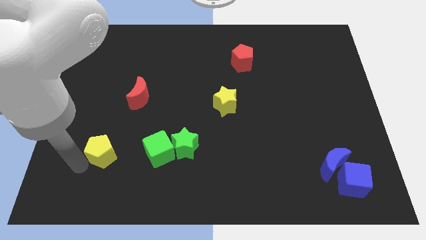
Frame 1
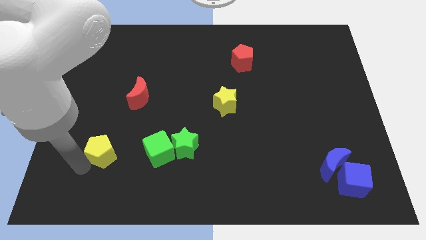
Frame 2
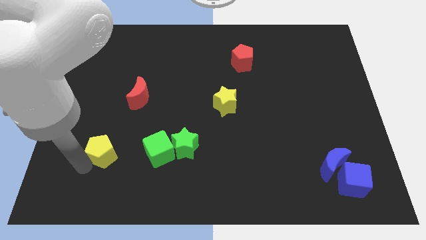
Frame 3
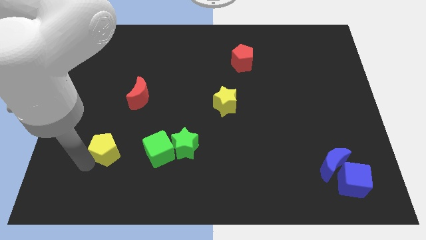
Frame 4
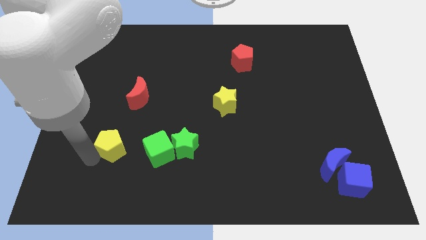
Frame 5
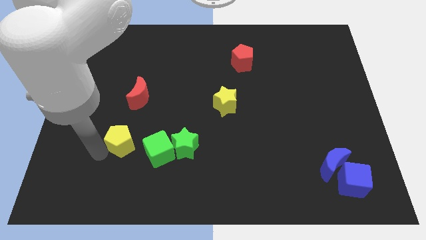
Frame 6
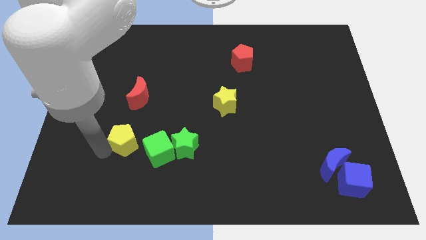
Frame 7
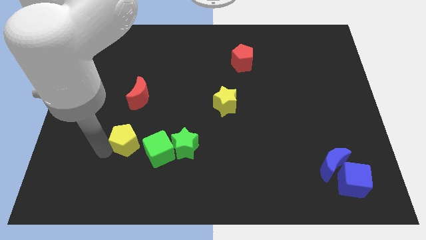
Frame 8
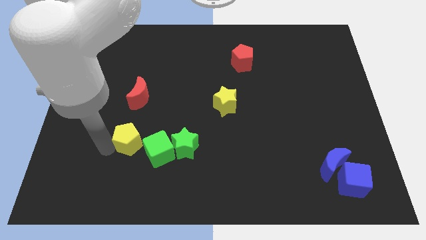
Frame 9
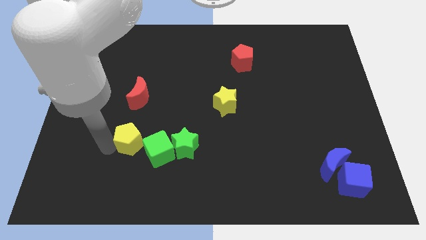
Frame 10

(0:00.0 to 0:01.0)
push the yellow pentagon close to the green cube

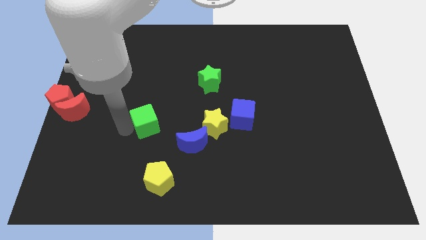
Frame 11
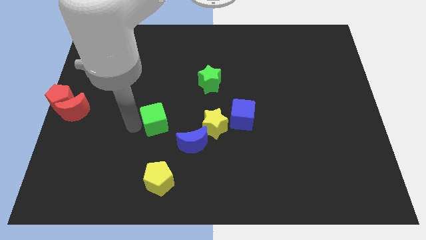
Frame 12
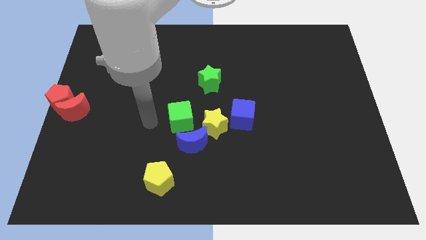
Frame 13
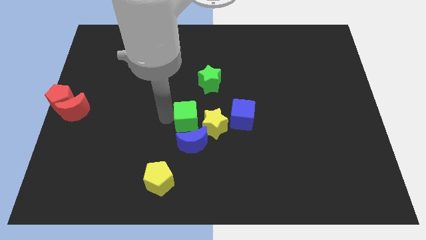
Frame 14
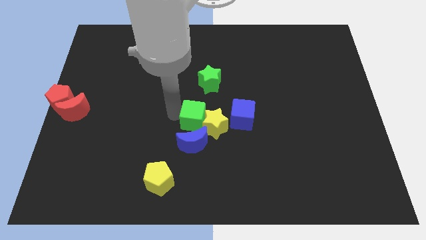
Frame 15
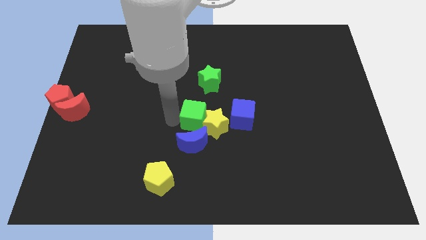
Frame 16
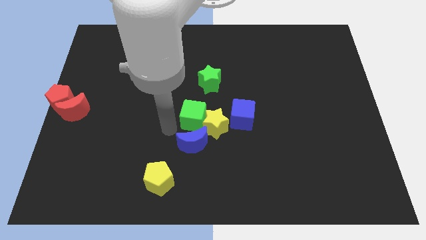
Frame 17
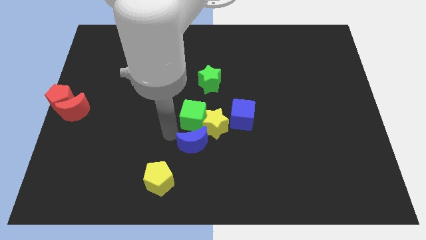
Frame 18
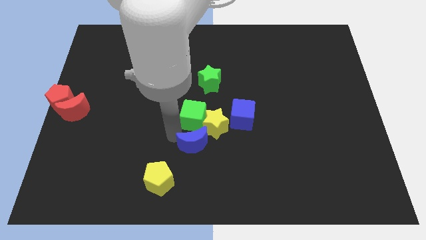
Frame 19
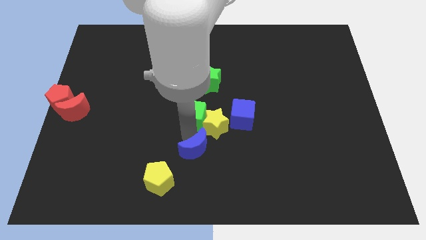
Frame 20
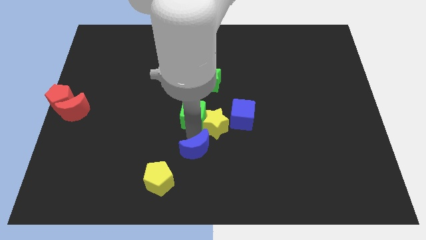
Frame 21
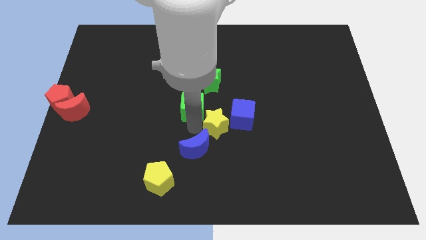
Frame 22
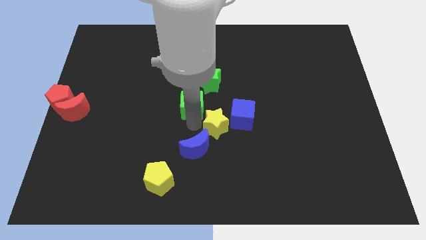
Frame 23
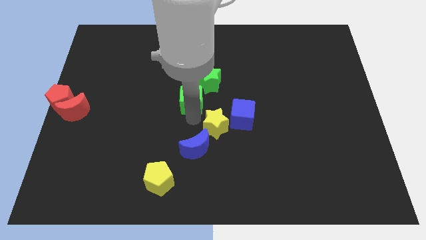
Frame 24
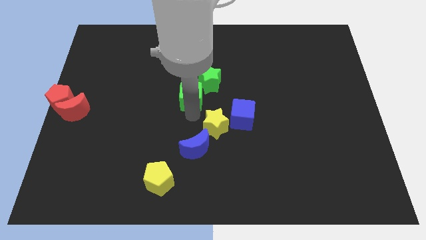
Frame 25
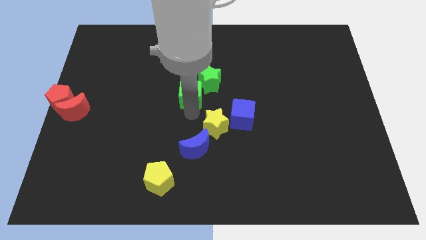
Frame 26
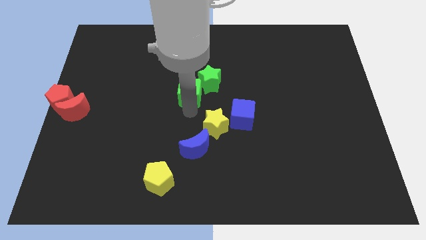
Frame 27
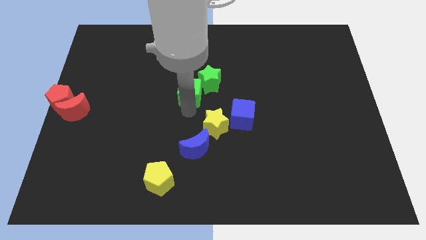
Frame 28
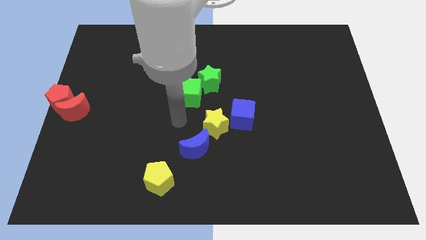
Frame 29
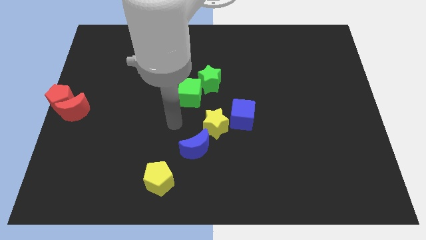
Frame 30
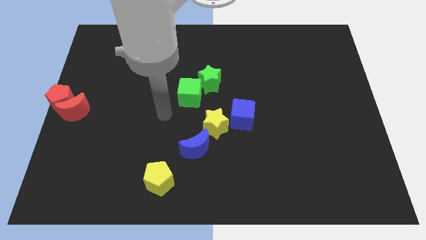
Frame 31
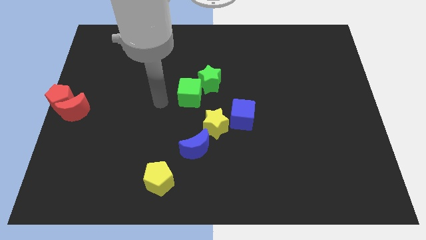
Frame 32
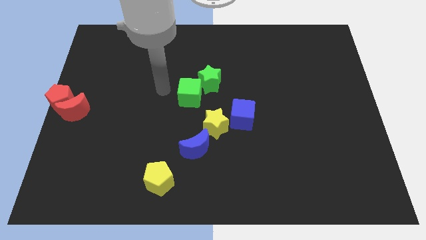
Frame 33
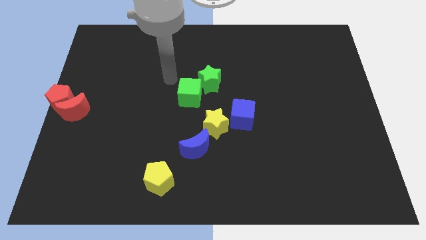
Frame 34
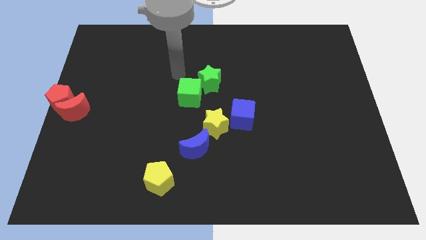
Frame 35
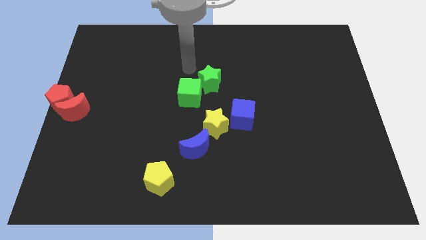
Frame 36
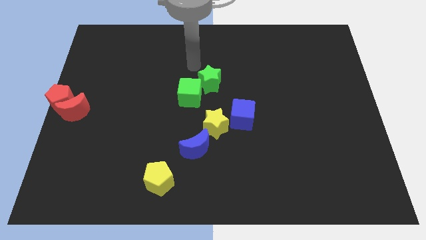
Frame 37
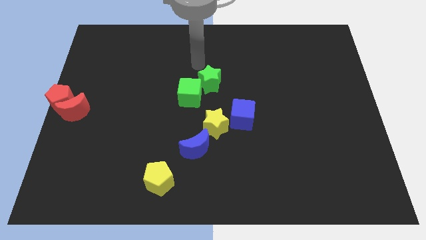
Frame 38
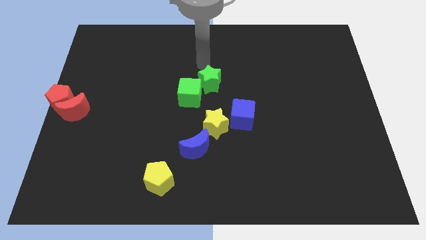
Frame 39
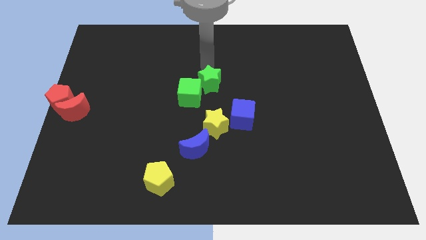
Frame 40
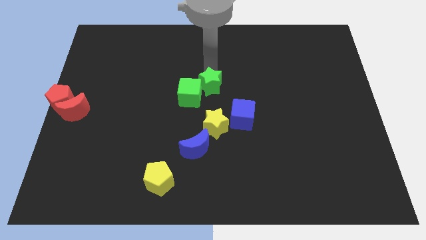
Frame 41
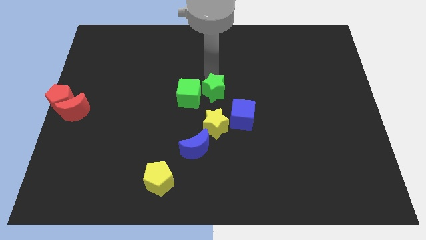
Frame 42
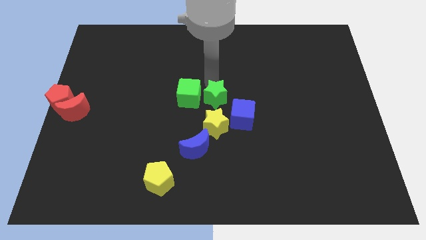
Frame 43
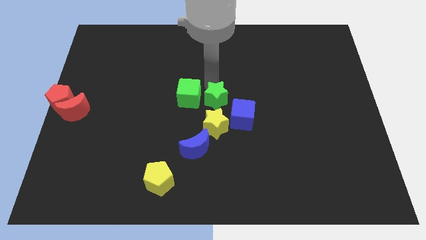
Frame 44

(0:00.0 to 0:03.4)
push the green star to the right side of the green cube

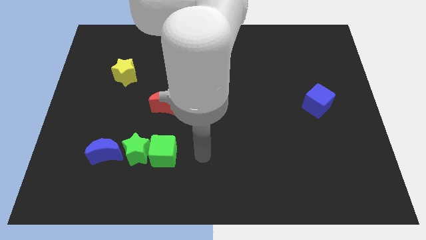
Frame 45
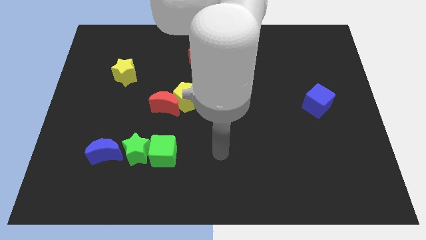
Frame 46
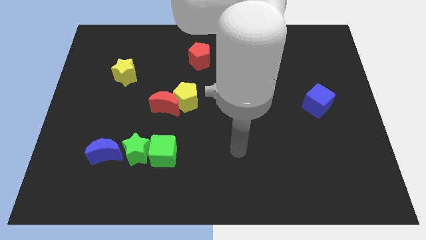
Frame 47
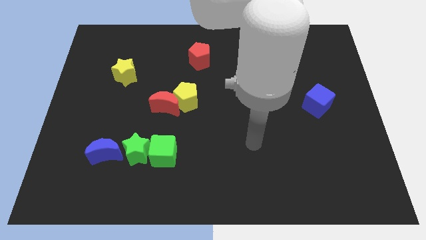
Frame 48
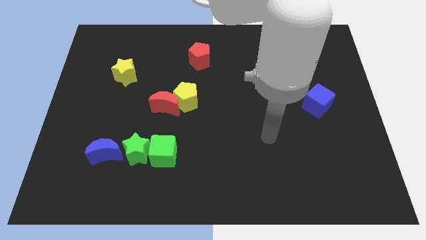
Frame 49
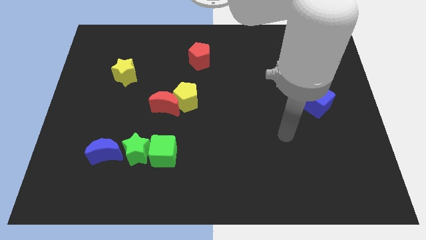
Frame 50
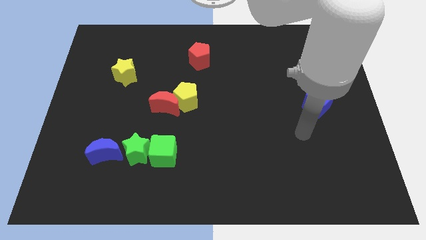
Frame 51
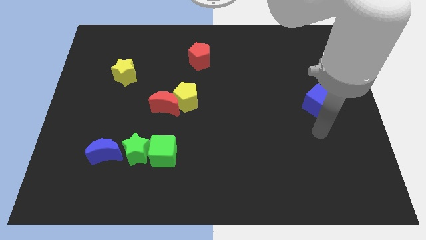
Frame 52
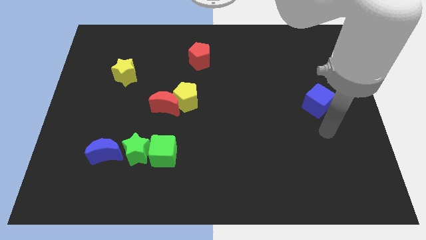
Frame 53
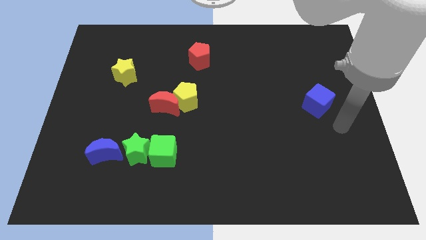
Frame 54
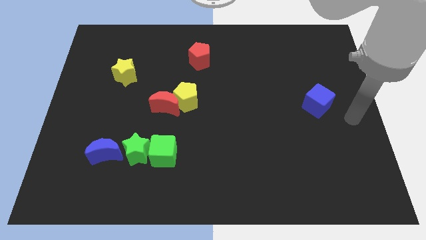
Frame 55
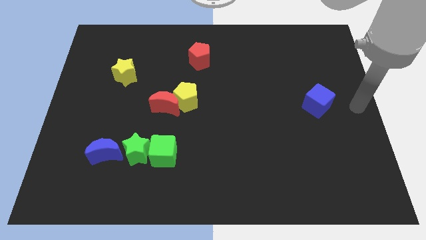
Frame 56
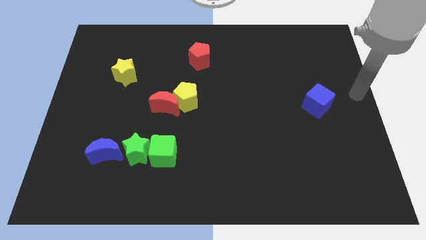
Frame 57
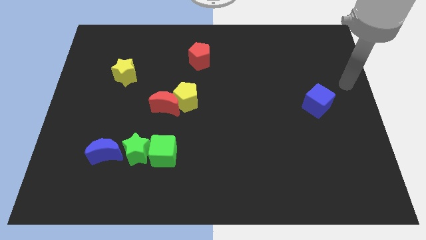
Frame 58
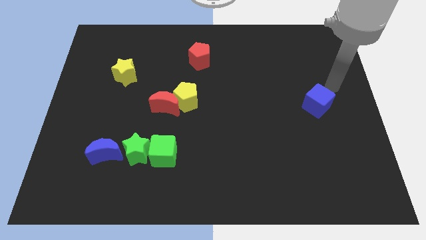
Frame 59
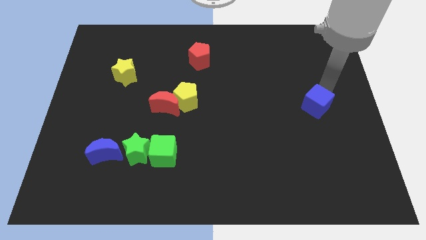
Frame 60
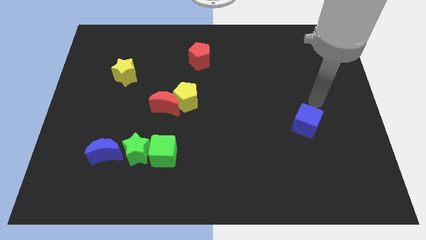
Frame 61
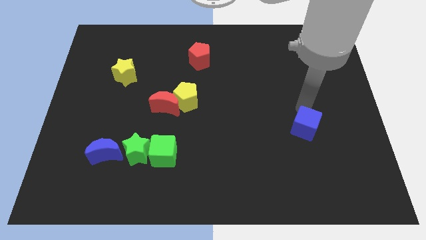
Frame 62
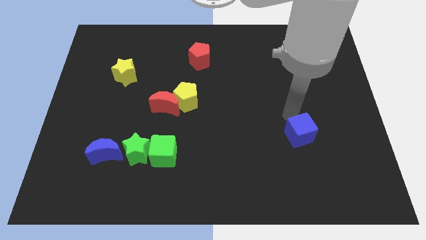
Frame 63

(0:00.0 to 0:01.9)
move your arm into the blue cube

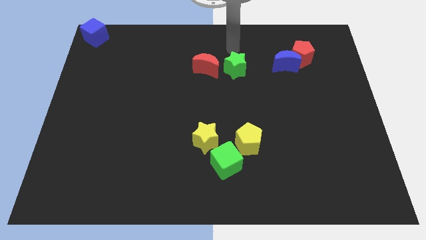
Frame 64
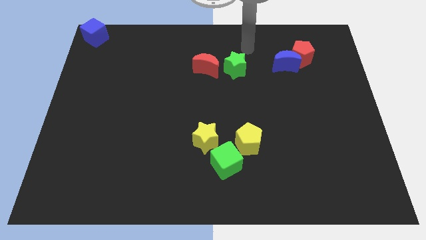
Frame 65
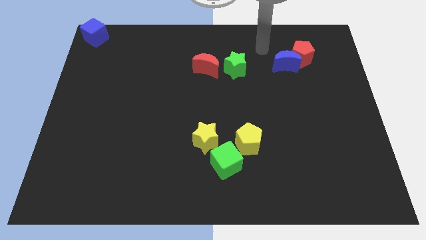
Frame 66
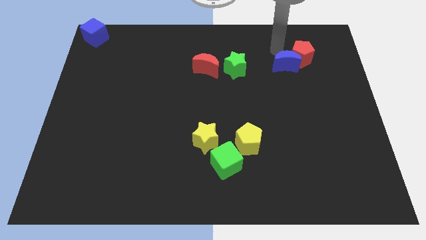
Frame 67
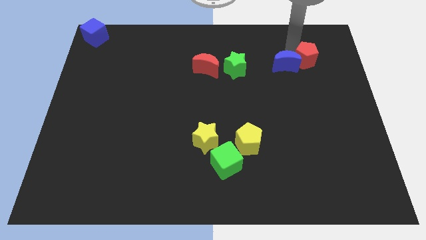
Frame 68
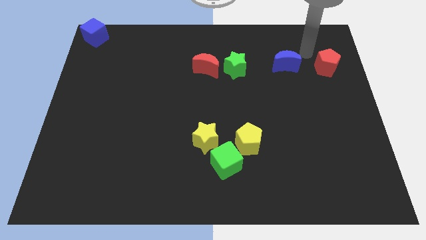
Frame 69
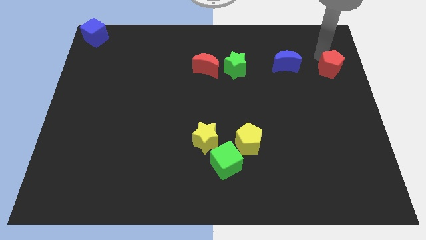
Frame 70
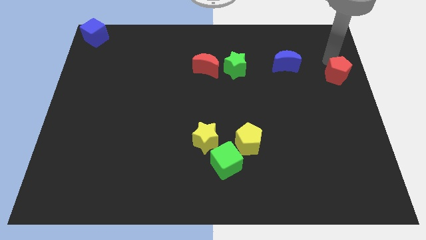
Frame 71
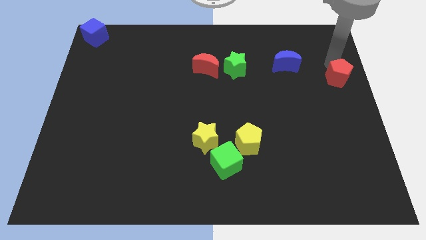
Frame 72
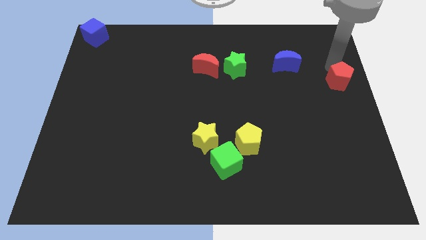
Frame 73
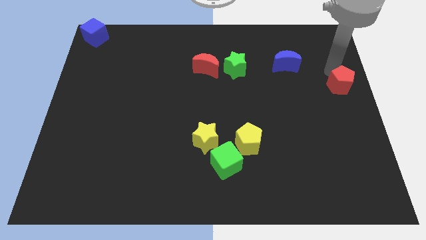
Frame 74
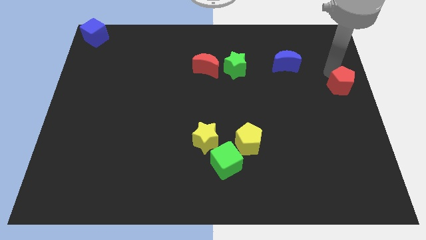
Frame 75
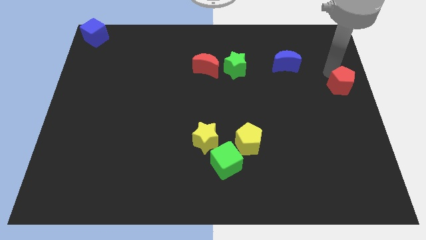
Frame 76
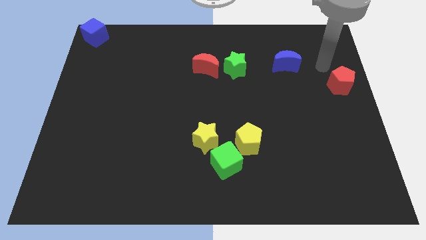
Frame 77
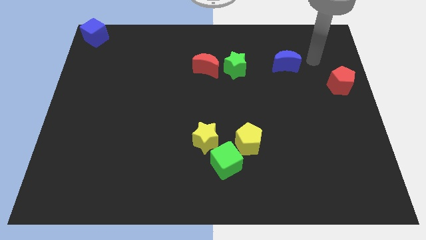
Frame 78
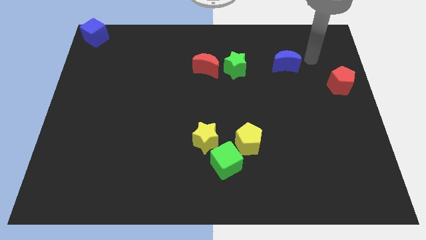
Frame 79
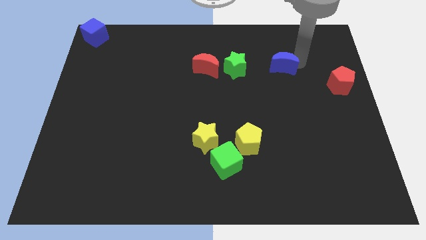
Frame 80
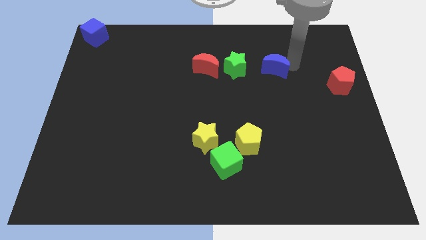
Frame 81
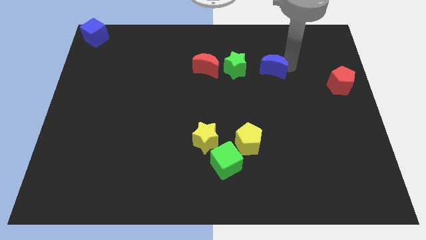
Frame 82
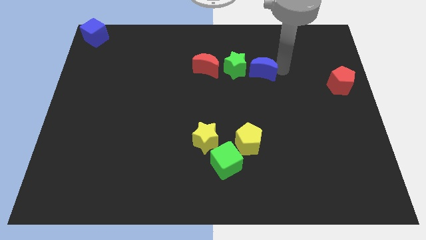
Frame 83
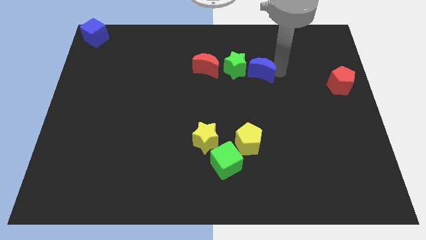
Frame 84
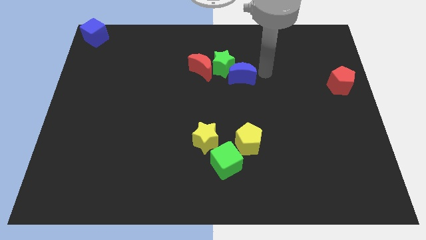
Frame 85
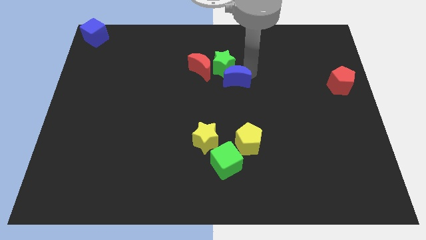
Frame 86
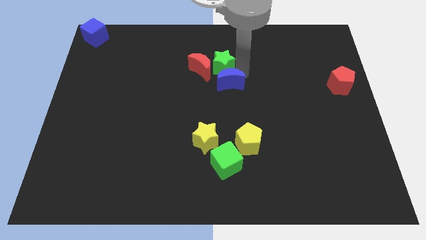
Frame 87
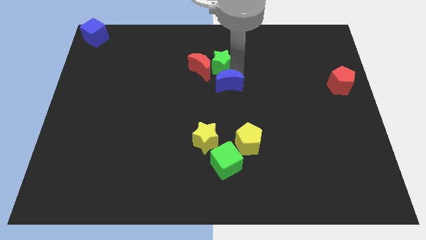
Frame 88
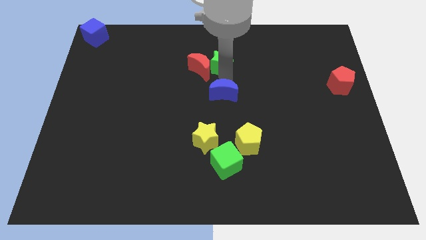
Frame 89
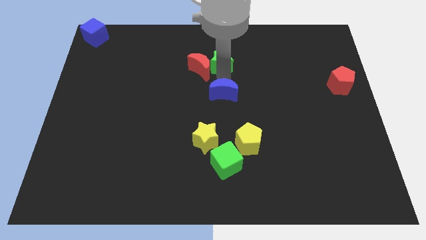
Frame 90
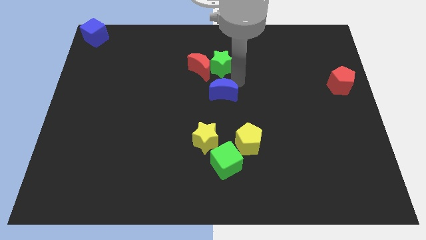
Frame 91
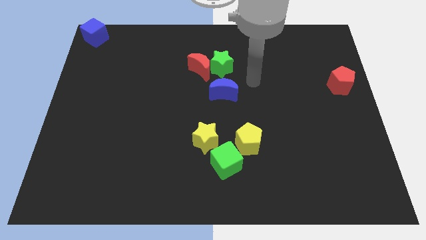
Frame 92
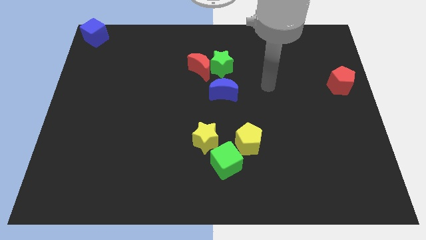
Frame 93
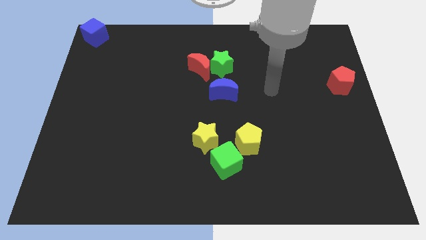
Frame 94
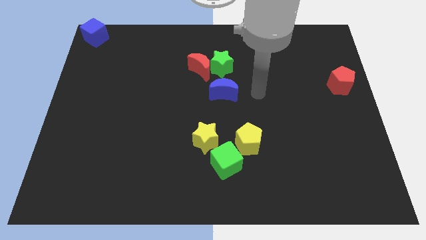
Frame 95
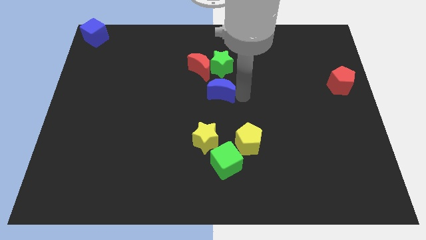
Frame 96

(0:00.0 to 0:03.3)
separate the red pentagon and blue moon
